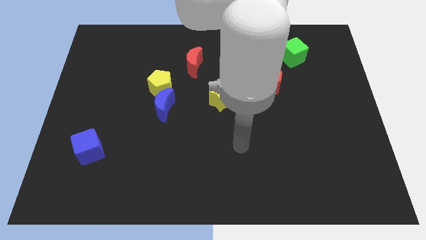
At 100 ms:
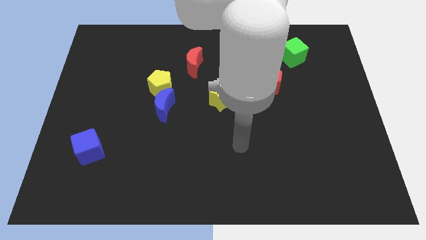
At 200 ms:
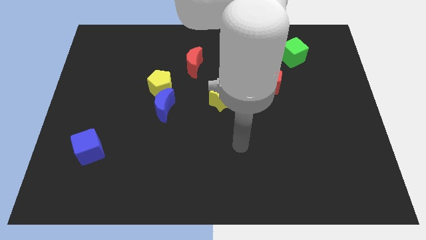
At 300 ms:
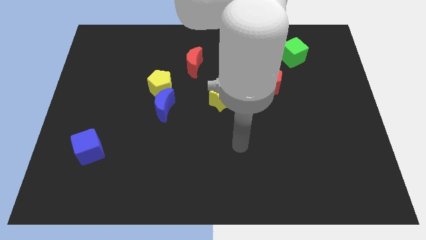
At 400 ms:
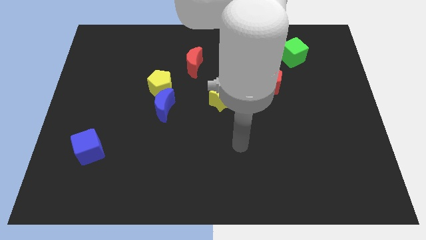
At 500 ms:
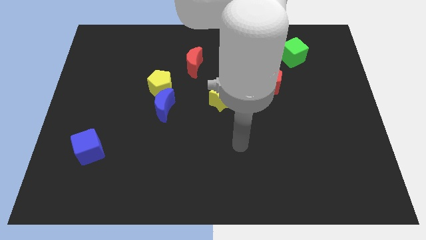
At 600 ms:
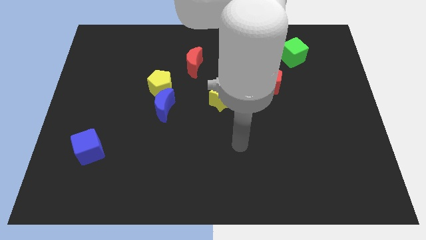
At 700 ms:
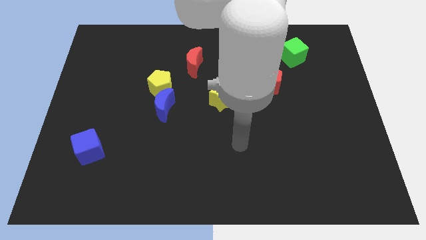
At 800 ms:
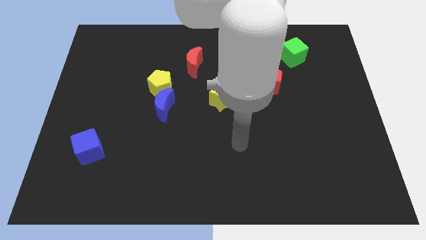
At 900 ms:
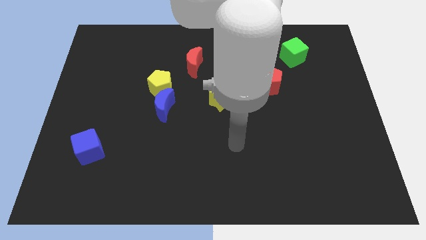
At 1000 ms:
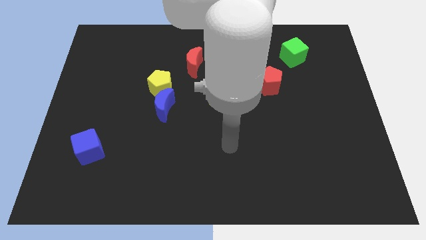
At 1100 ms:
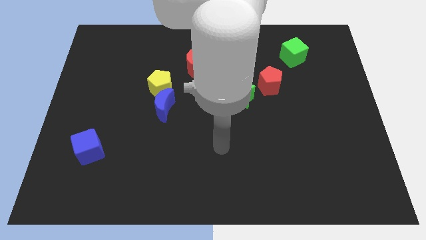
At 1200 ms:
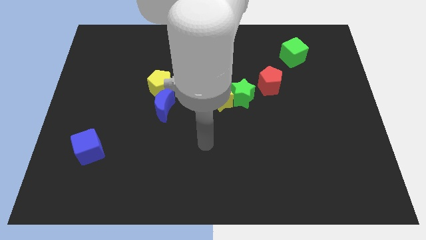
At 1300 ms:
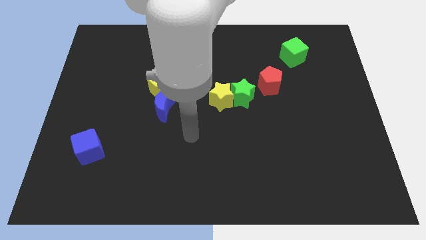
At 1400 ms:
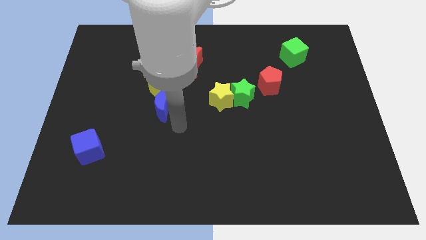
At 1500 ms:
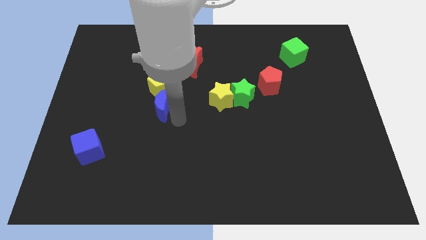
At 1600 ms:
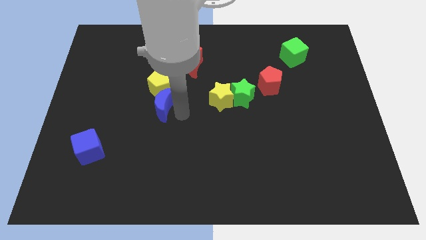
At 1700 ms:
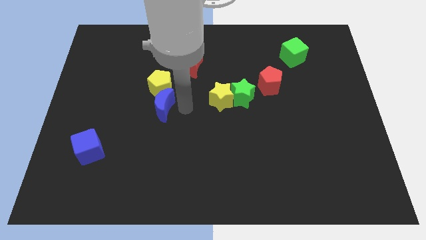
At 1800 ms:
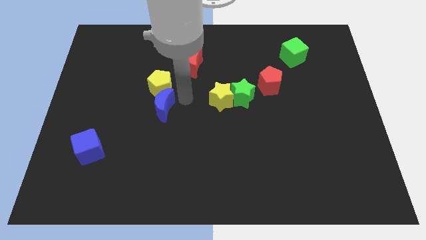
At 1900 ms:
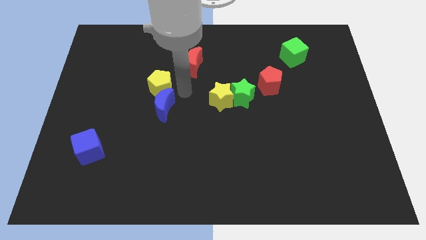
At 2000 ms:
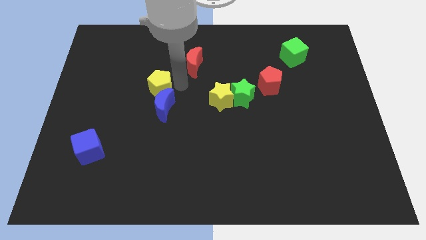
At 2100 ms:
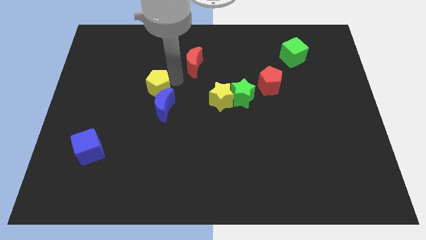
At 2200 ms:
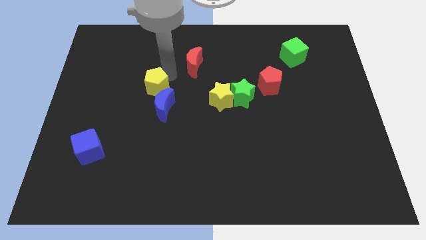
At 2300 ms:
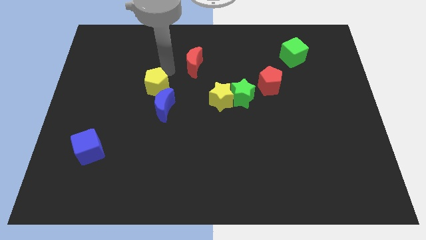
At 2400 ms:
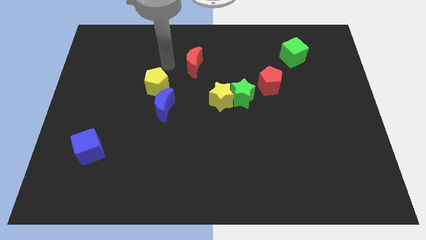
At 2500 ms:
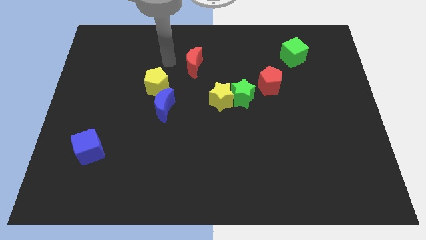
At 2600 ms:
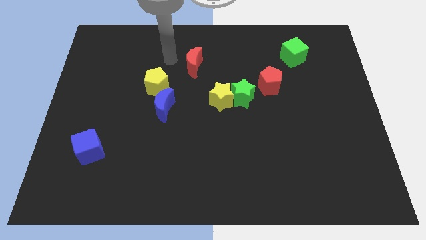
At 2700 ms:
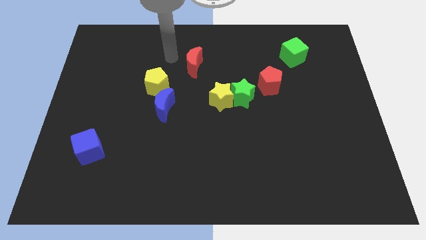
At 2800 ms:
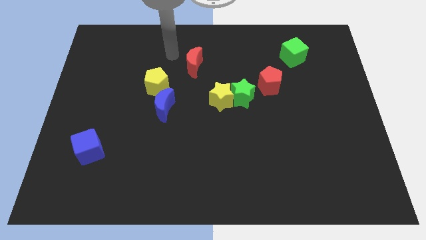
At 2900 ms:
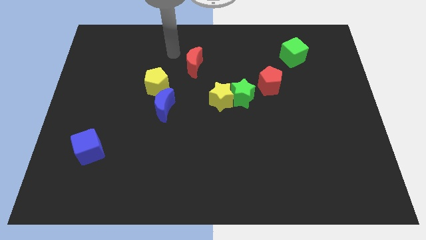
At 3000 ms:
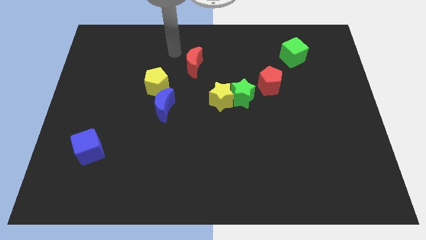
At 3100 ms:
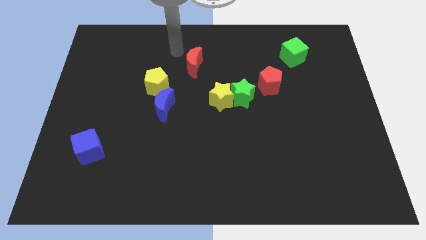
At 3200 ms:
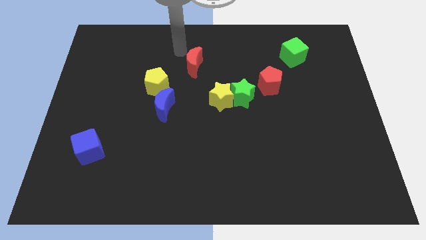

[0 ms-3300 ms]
move your hand close to the red crescent

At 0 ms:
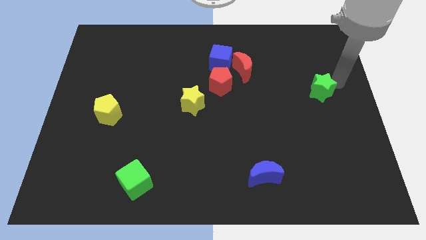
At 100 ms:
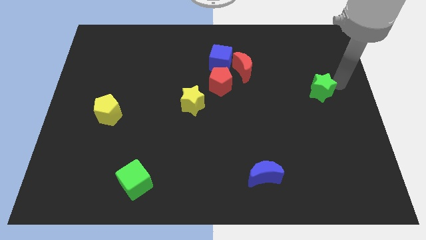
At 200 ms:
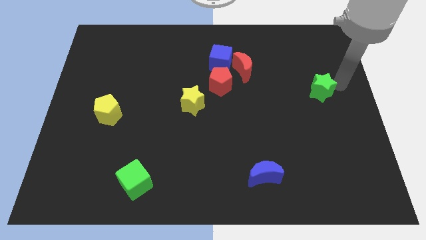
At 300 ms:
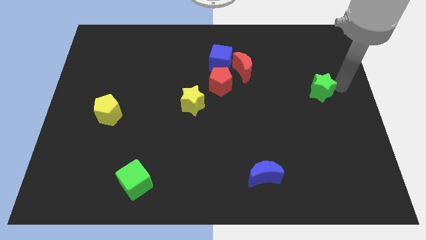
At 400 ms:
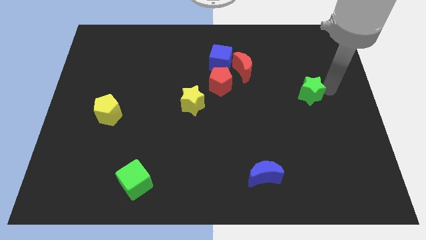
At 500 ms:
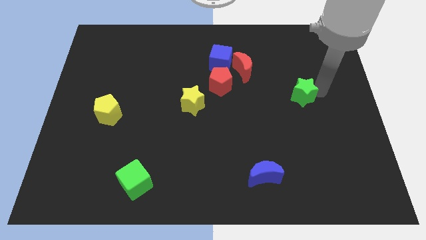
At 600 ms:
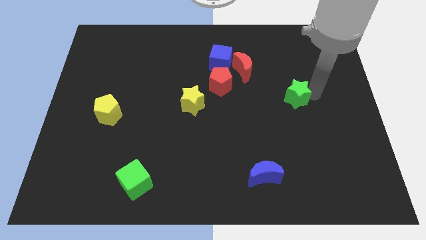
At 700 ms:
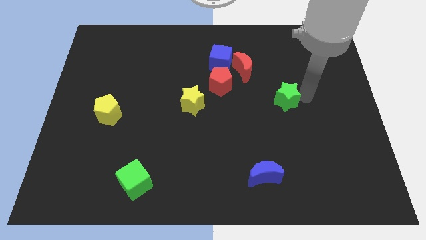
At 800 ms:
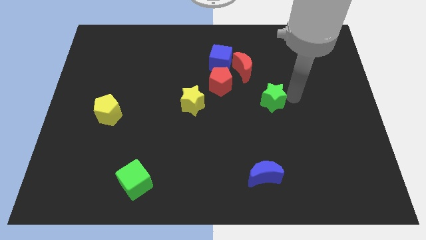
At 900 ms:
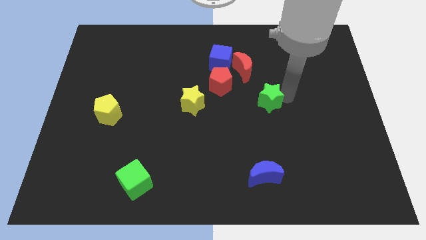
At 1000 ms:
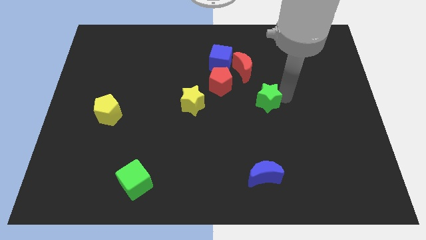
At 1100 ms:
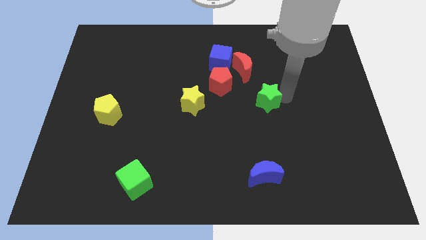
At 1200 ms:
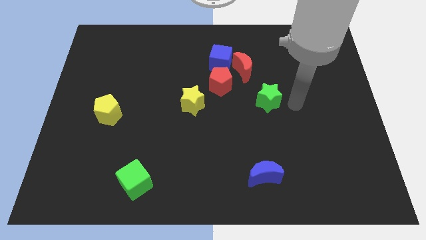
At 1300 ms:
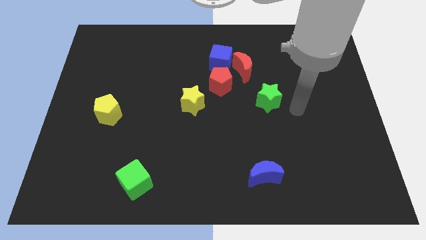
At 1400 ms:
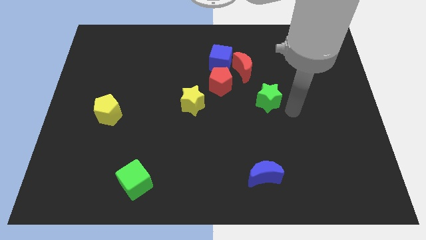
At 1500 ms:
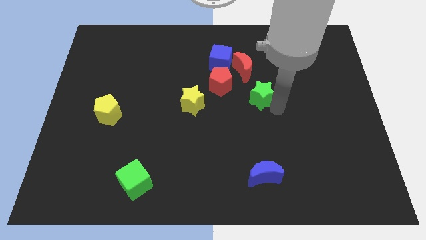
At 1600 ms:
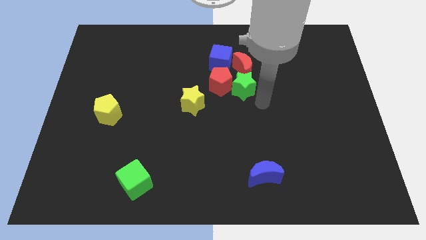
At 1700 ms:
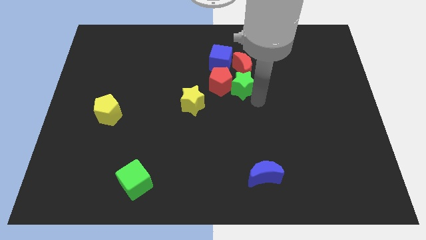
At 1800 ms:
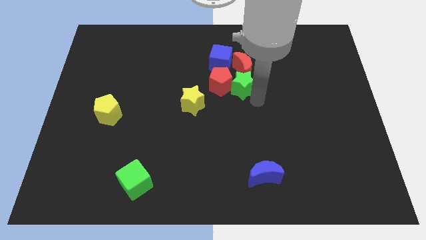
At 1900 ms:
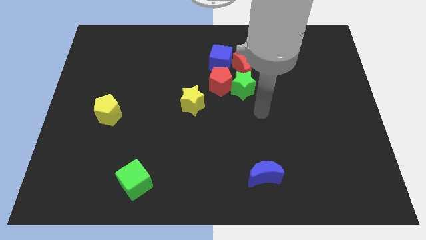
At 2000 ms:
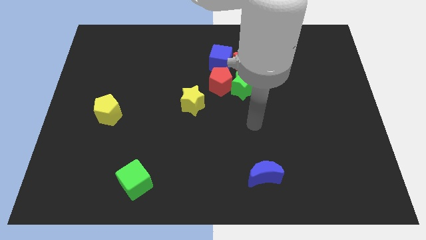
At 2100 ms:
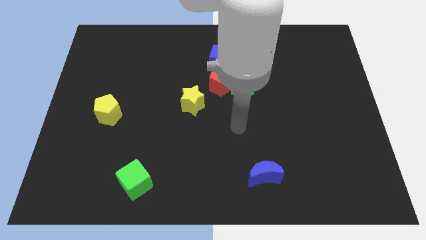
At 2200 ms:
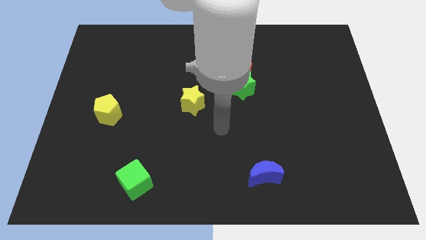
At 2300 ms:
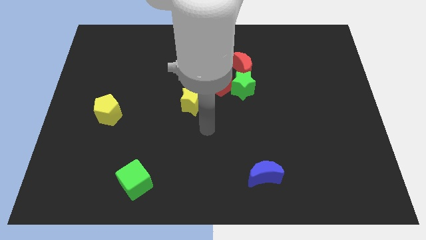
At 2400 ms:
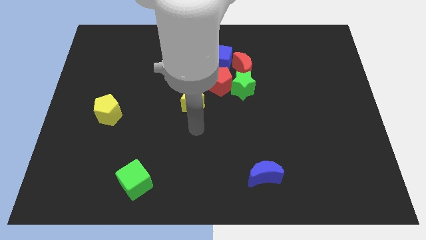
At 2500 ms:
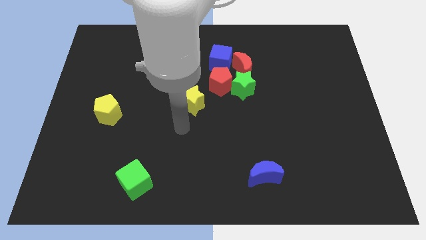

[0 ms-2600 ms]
push green star towards red pentagon

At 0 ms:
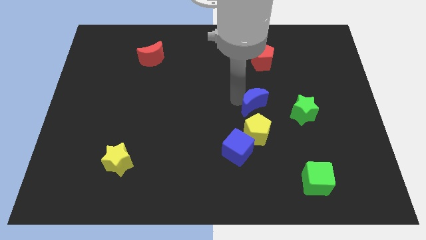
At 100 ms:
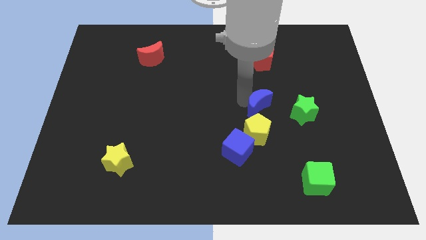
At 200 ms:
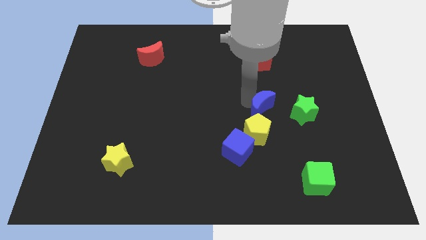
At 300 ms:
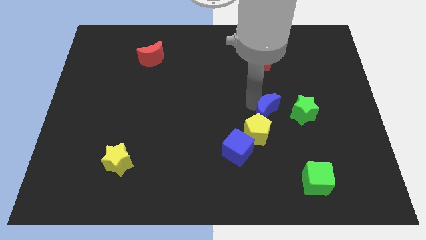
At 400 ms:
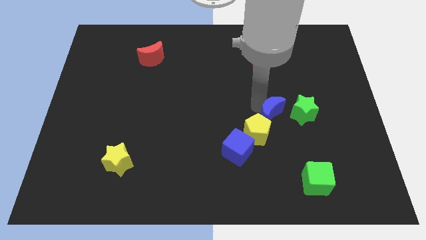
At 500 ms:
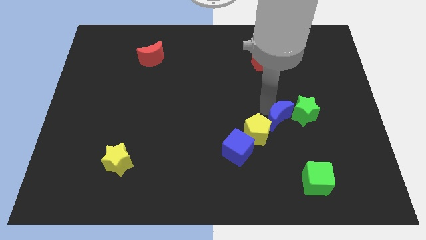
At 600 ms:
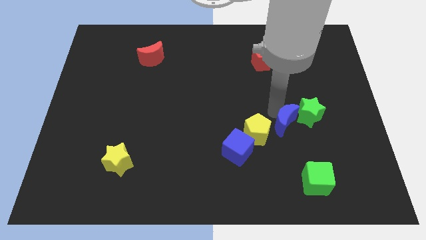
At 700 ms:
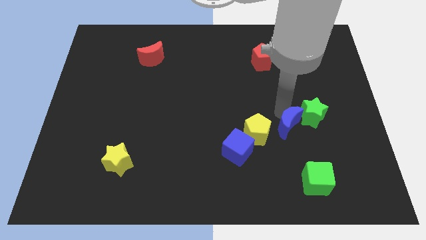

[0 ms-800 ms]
make the blue crescent to touch the green star

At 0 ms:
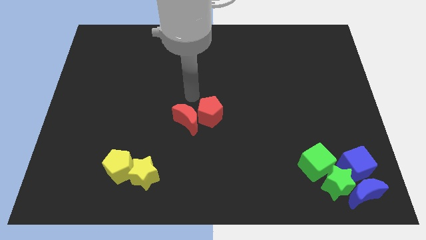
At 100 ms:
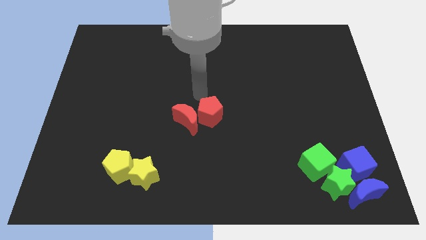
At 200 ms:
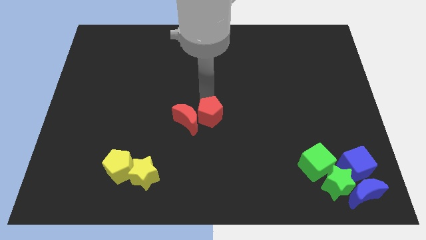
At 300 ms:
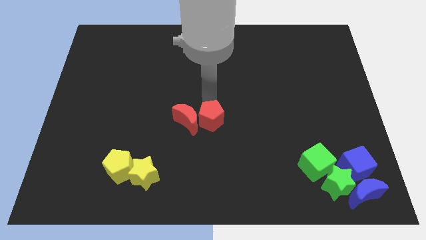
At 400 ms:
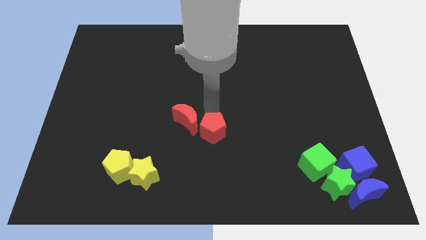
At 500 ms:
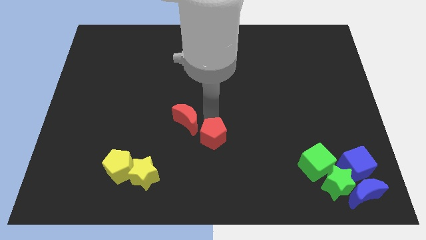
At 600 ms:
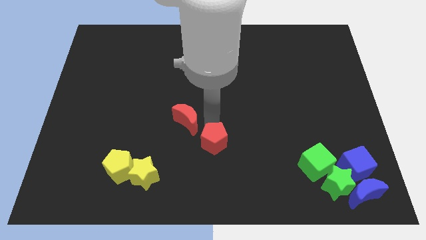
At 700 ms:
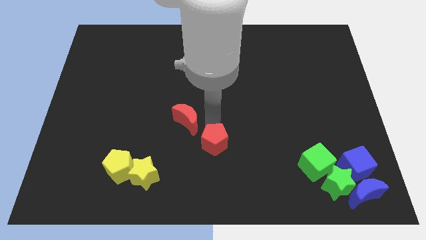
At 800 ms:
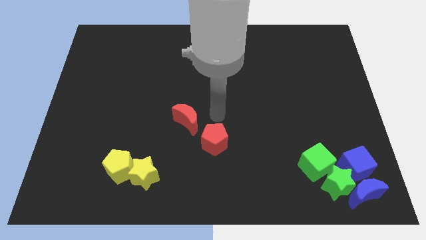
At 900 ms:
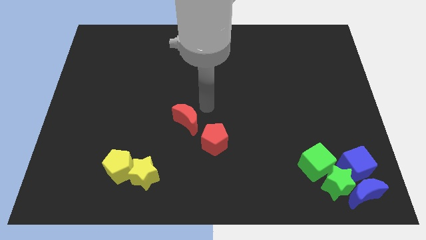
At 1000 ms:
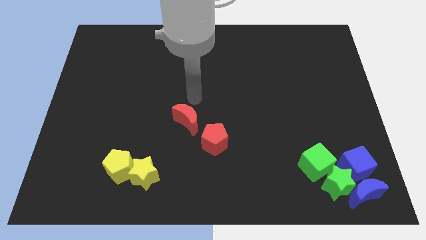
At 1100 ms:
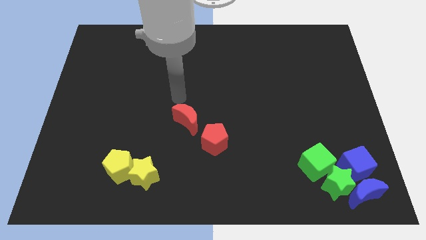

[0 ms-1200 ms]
push the red pentagon downward

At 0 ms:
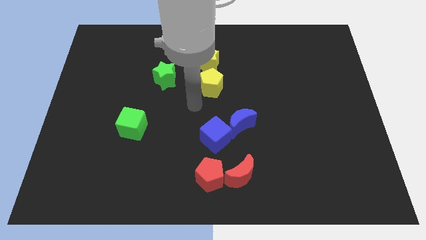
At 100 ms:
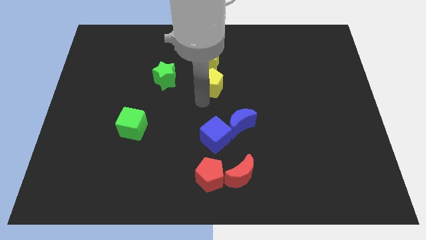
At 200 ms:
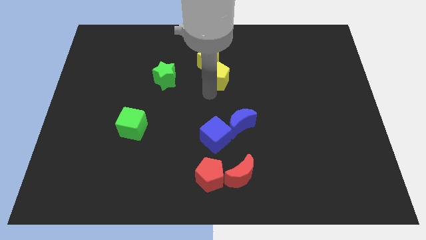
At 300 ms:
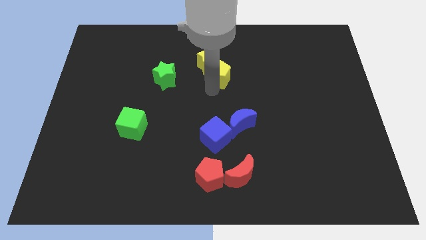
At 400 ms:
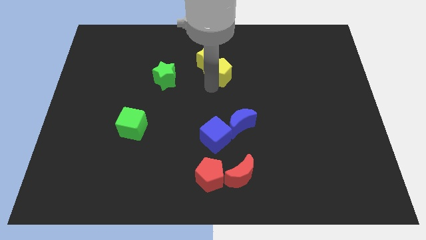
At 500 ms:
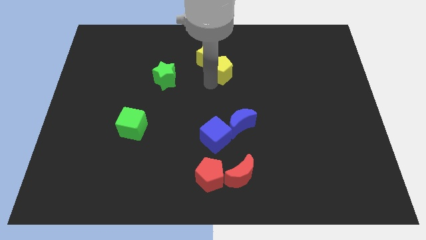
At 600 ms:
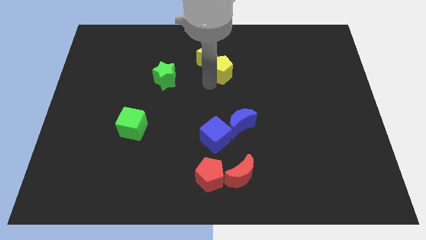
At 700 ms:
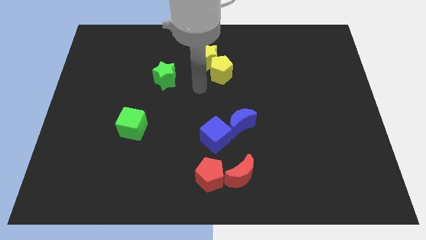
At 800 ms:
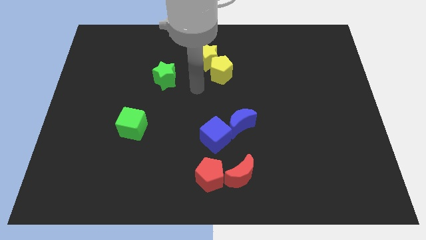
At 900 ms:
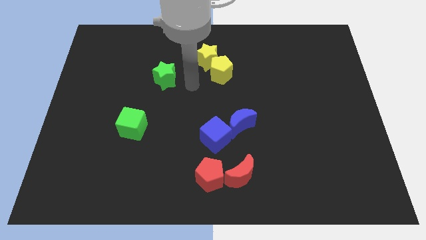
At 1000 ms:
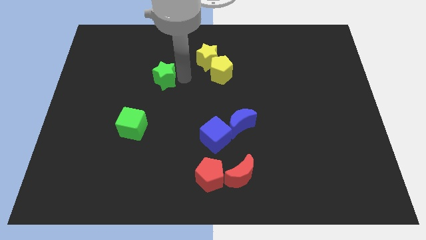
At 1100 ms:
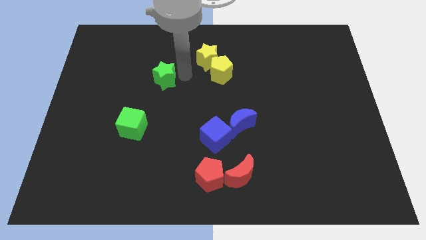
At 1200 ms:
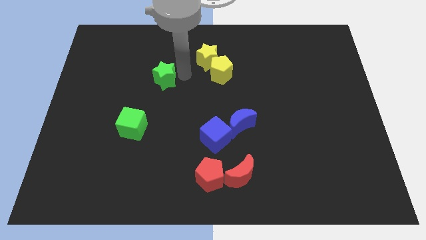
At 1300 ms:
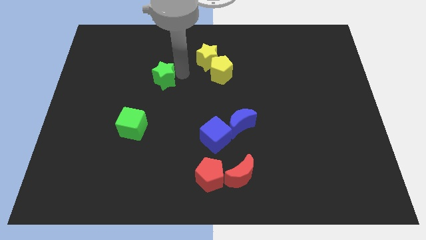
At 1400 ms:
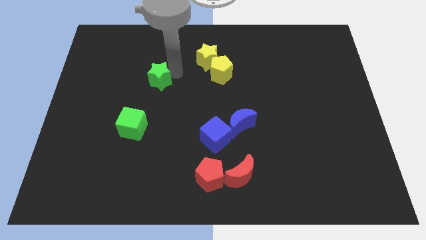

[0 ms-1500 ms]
push the yellow pentagon into the yellow star
